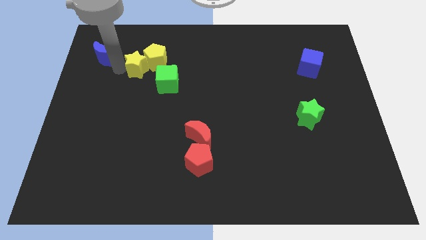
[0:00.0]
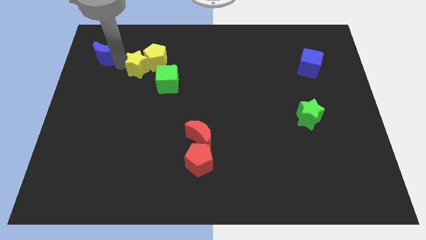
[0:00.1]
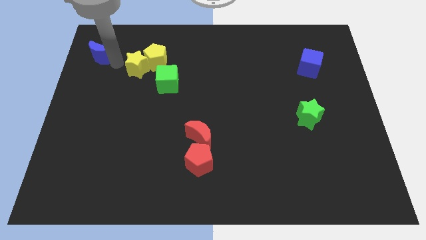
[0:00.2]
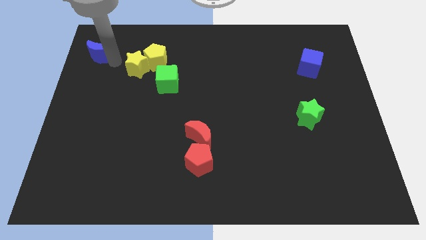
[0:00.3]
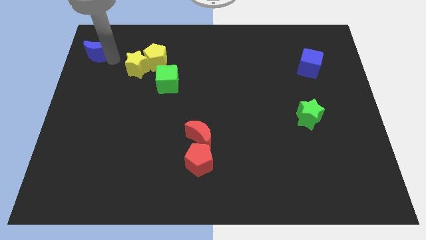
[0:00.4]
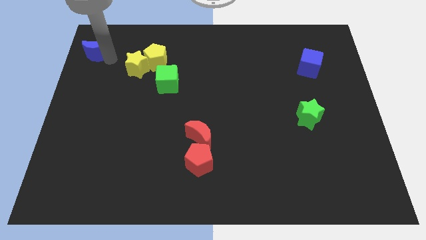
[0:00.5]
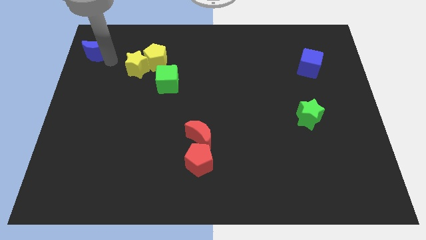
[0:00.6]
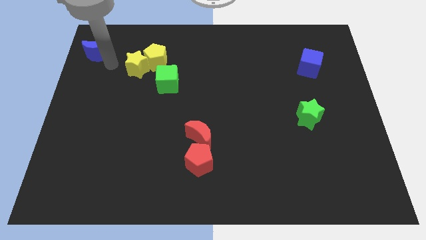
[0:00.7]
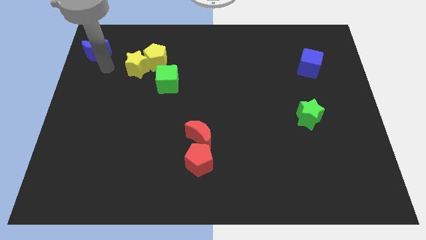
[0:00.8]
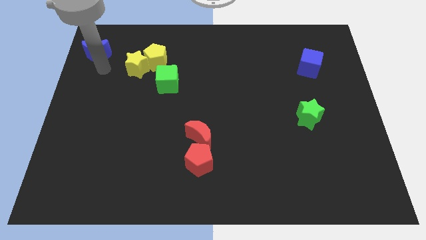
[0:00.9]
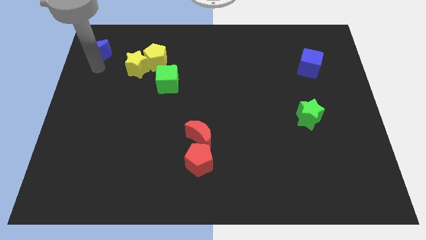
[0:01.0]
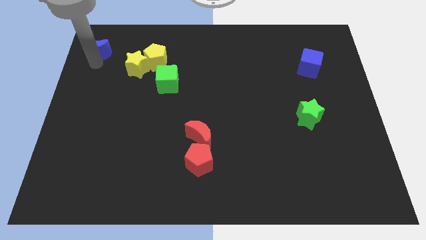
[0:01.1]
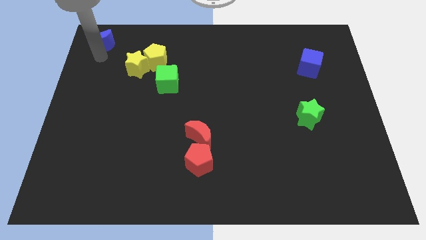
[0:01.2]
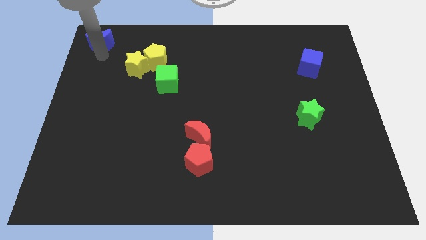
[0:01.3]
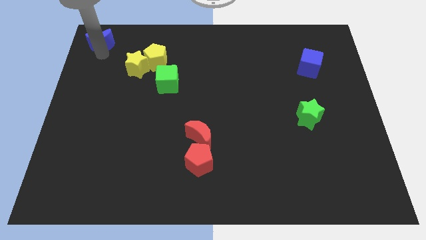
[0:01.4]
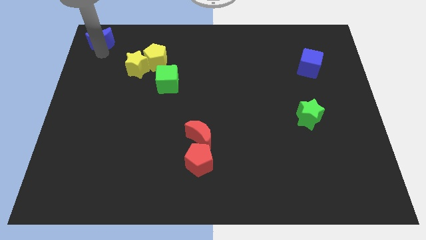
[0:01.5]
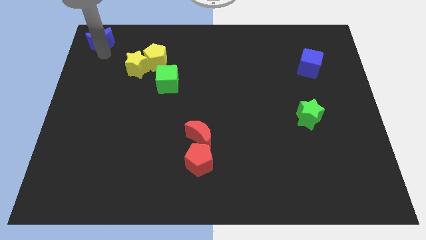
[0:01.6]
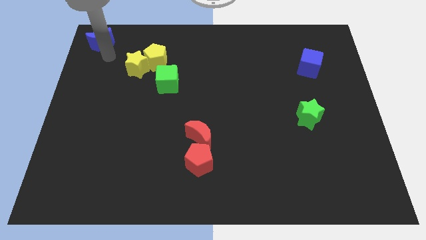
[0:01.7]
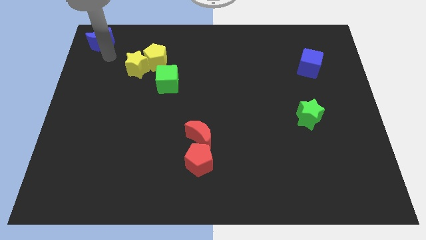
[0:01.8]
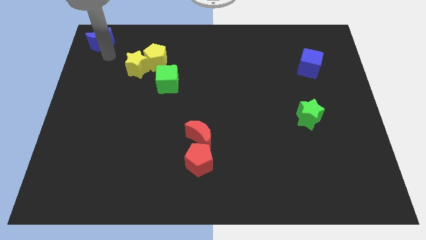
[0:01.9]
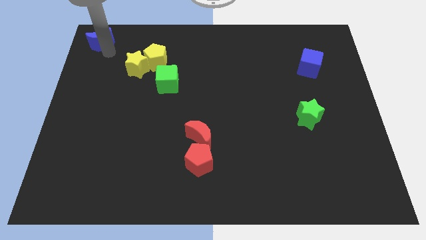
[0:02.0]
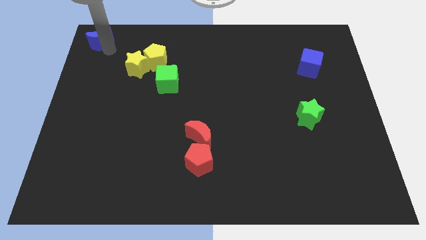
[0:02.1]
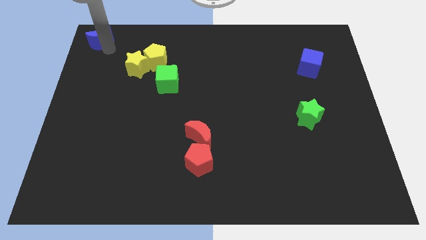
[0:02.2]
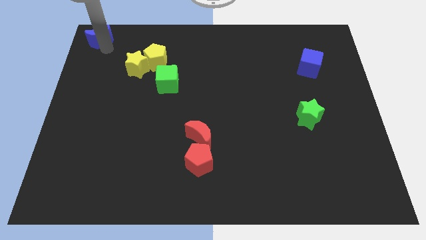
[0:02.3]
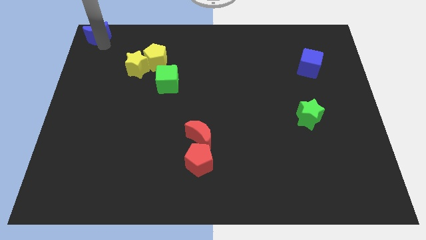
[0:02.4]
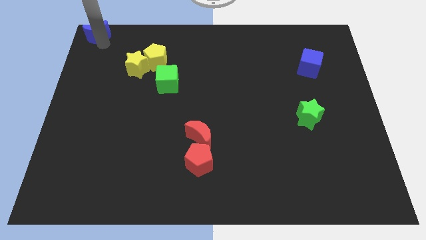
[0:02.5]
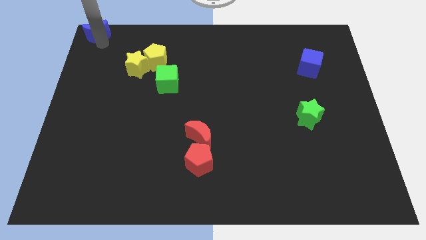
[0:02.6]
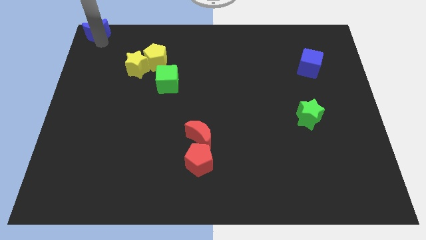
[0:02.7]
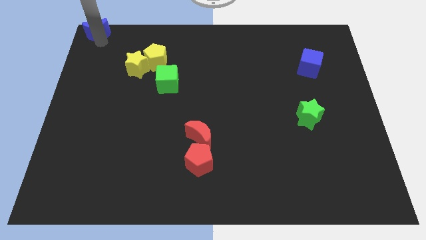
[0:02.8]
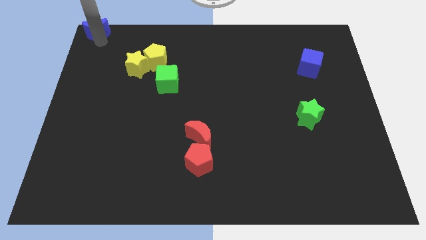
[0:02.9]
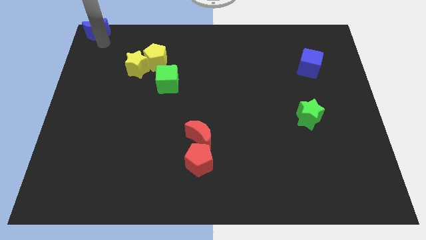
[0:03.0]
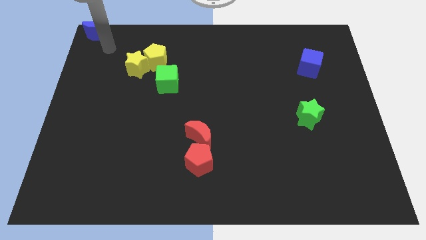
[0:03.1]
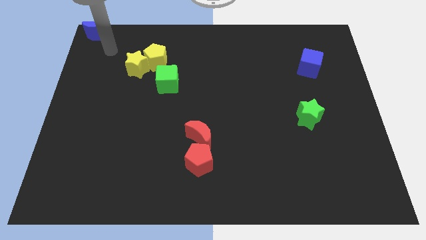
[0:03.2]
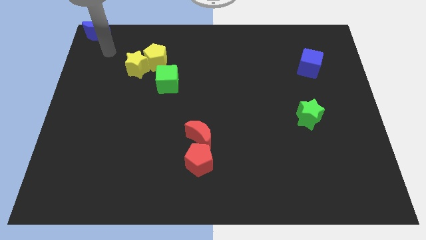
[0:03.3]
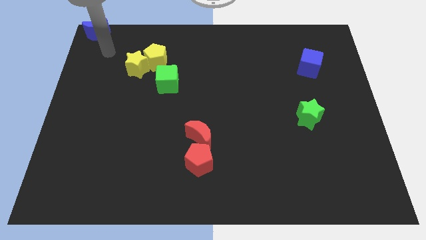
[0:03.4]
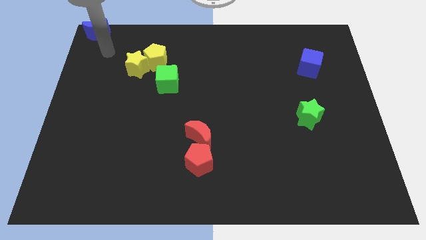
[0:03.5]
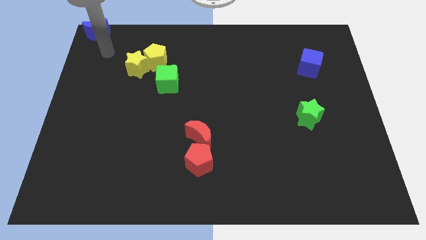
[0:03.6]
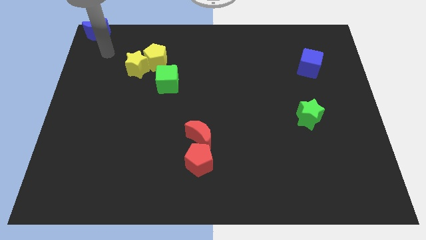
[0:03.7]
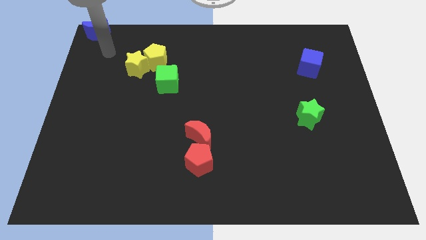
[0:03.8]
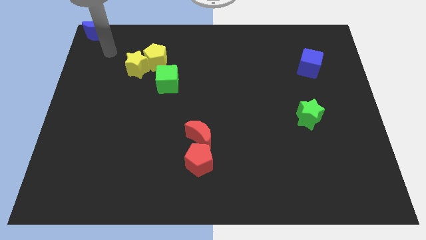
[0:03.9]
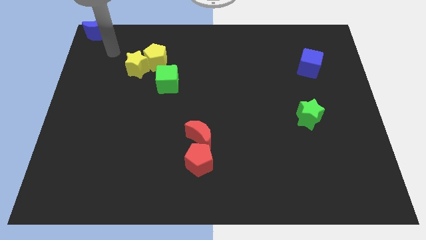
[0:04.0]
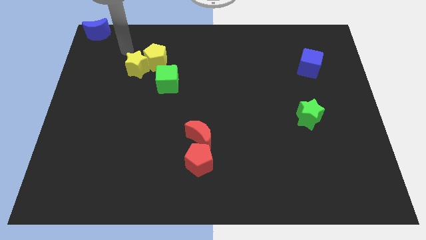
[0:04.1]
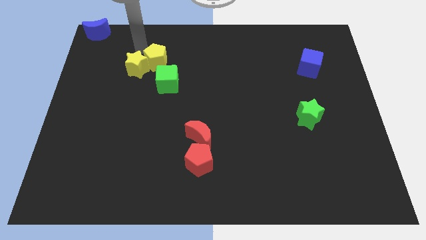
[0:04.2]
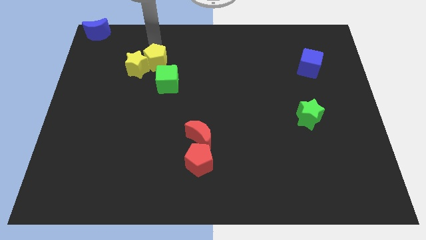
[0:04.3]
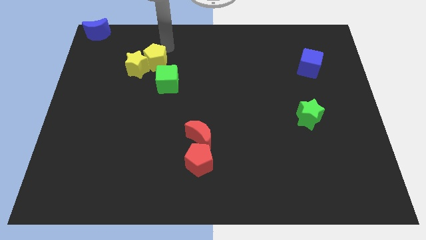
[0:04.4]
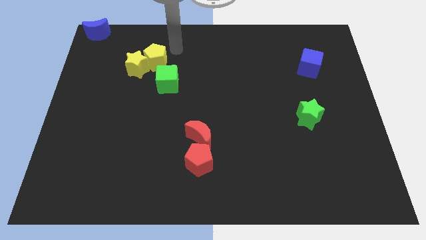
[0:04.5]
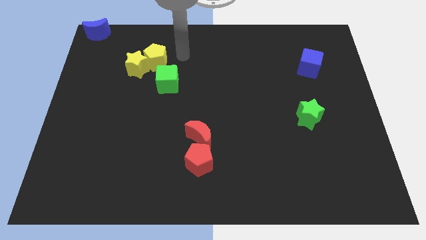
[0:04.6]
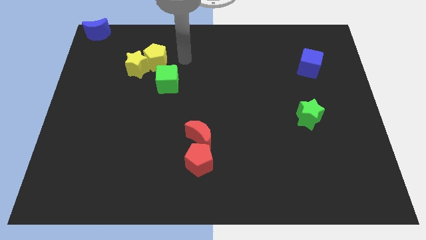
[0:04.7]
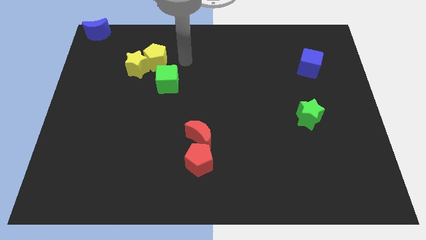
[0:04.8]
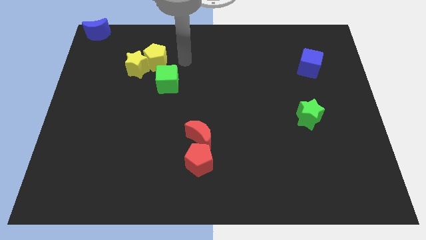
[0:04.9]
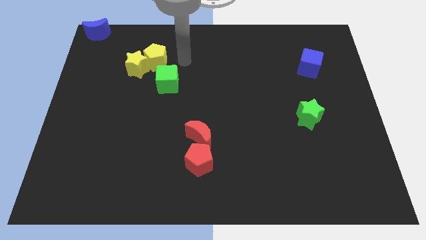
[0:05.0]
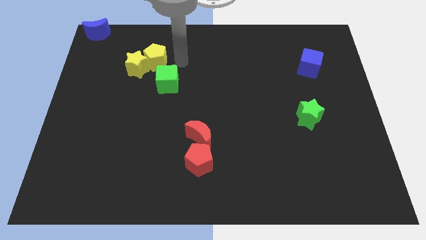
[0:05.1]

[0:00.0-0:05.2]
push the blue crescent towards the top left corner

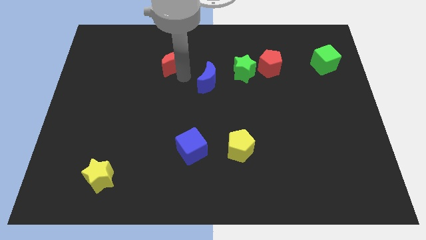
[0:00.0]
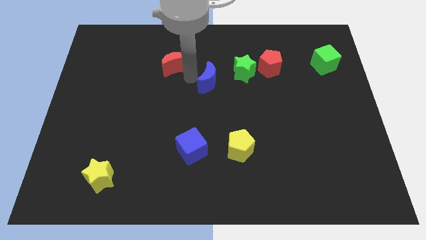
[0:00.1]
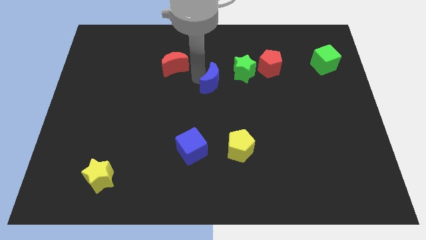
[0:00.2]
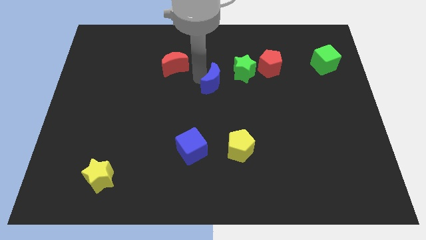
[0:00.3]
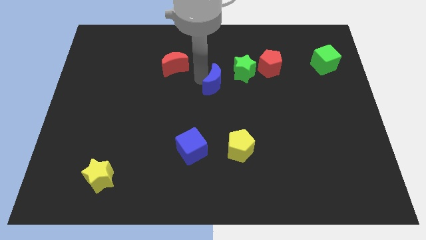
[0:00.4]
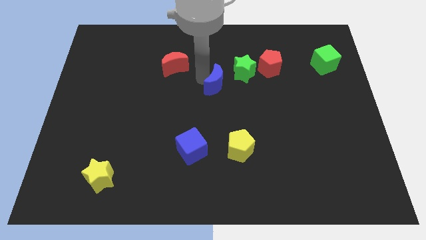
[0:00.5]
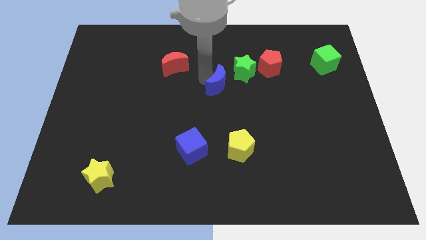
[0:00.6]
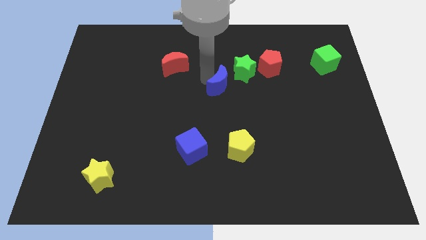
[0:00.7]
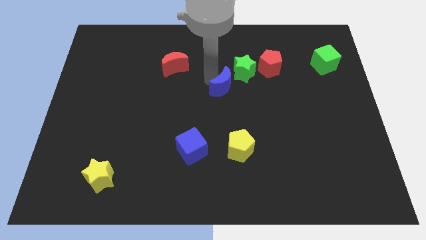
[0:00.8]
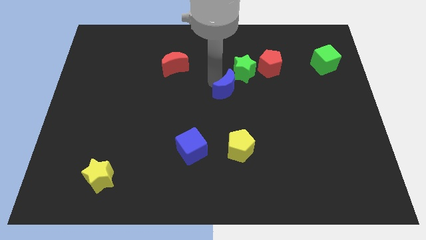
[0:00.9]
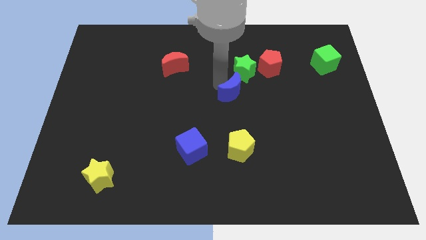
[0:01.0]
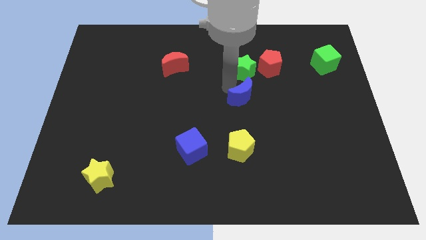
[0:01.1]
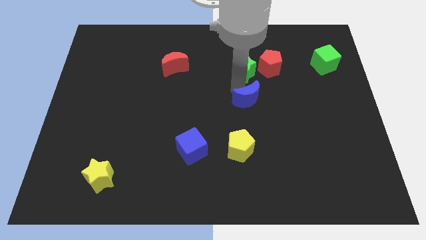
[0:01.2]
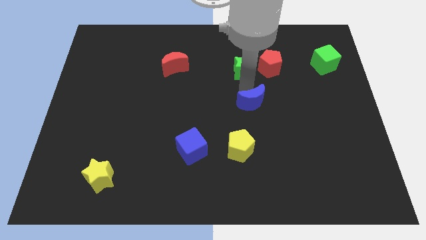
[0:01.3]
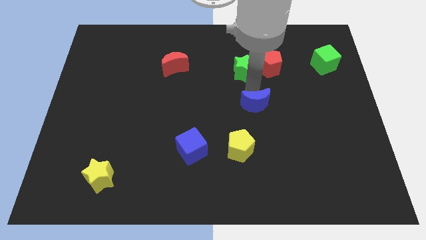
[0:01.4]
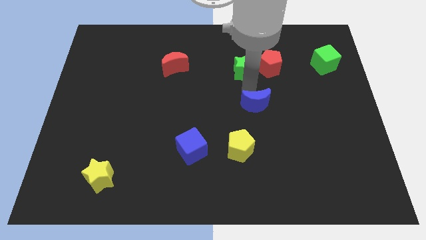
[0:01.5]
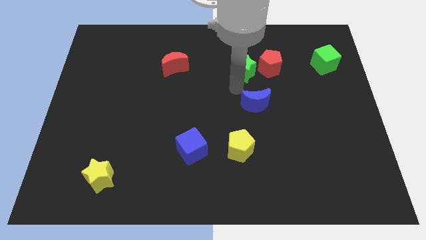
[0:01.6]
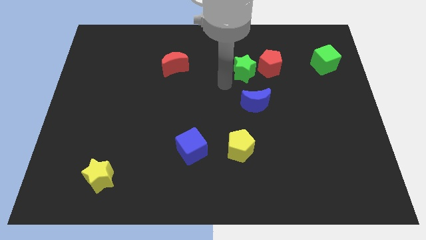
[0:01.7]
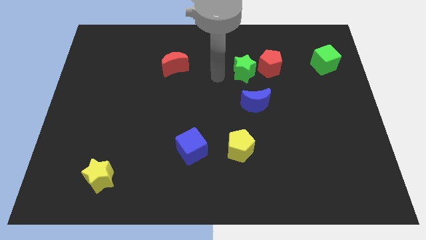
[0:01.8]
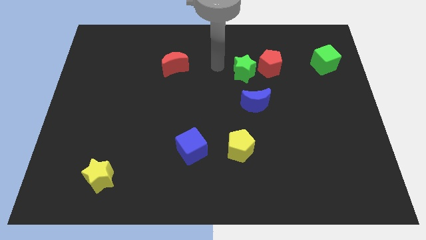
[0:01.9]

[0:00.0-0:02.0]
separate the blue moon from the red moon

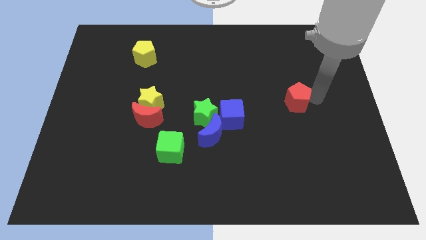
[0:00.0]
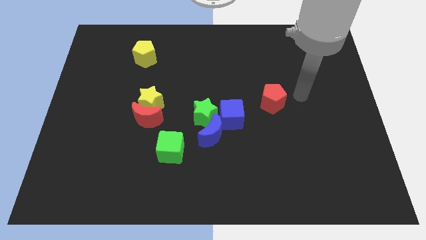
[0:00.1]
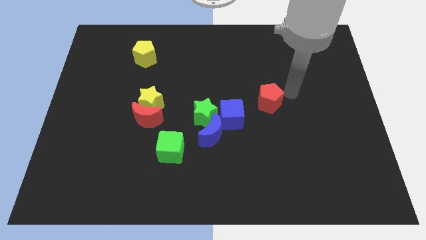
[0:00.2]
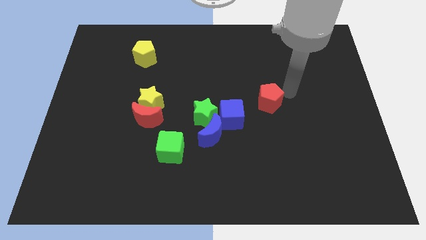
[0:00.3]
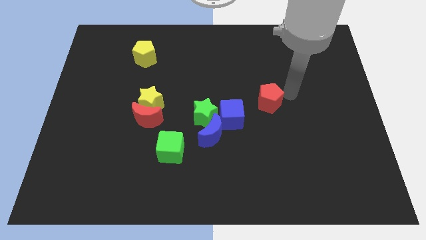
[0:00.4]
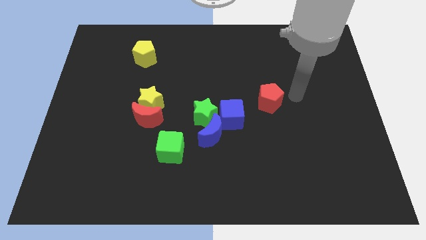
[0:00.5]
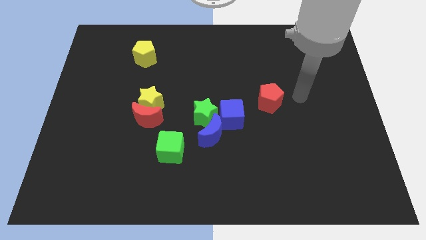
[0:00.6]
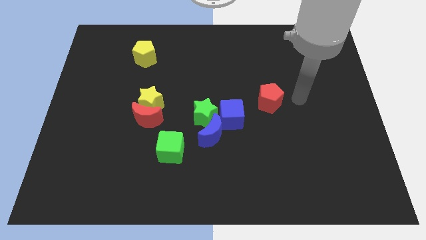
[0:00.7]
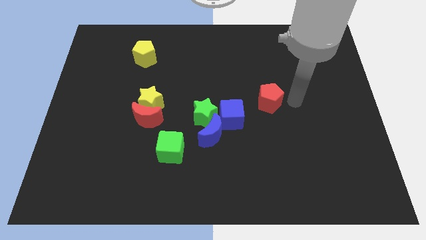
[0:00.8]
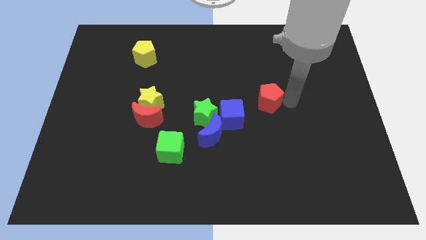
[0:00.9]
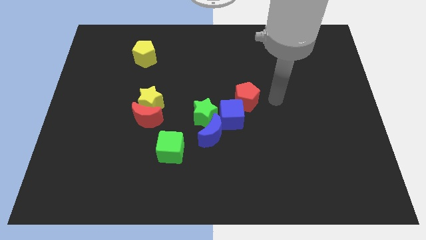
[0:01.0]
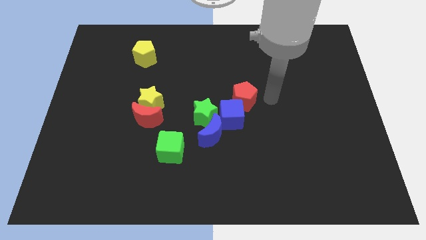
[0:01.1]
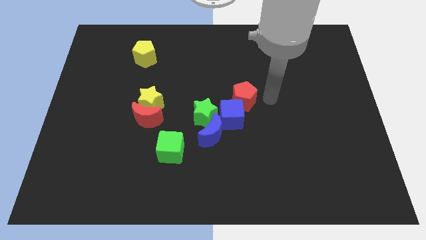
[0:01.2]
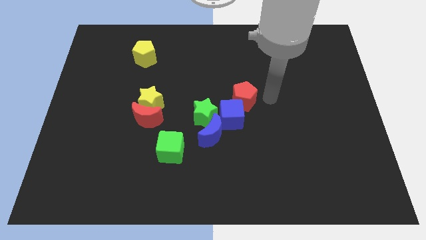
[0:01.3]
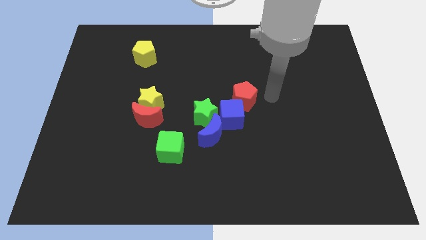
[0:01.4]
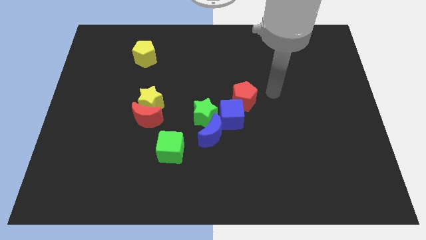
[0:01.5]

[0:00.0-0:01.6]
push the red pentagon to the left

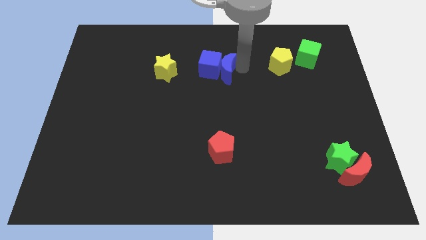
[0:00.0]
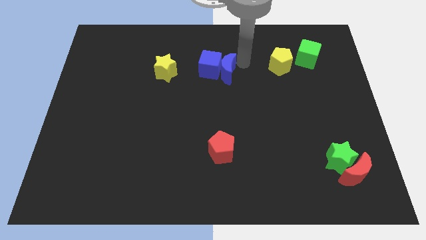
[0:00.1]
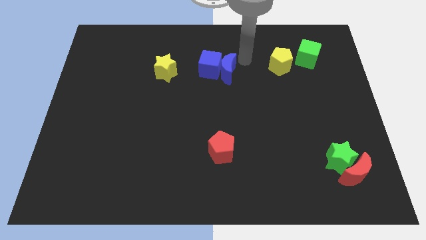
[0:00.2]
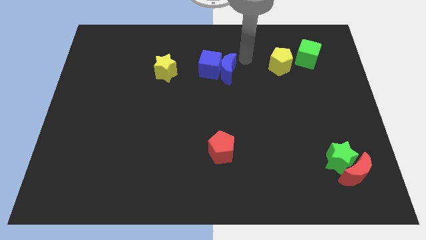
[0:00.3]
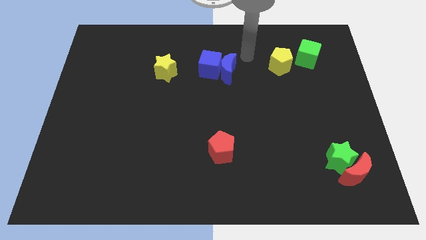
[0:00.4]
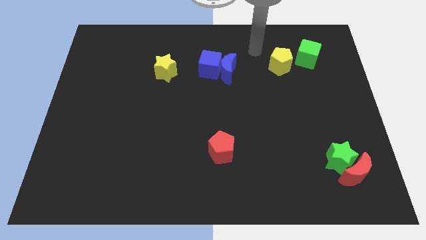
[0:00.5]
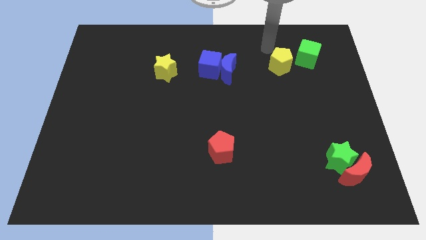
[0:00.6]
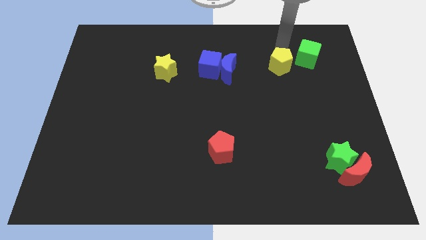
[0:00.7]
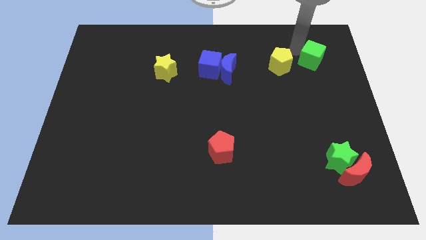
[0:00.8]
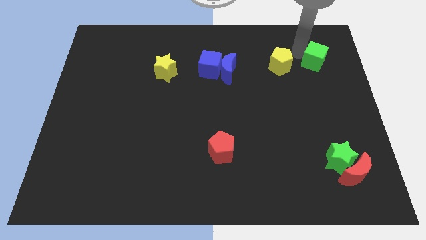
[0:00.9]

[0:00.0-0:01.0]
touch the green cube on the left
